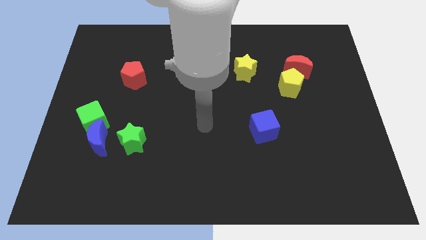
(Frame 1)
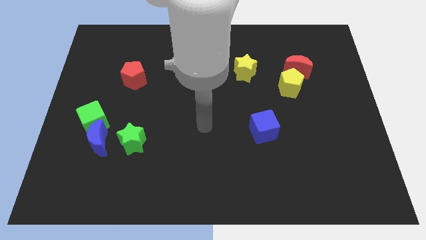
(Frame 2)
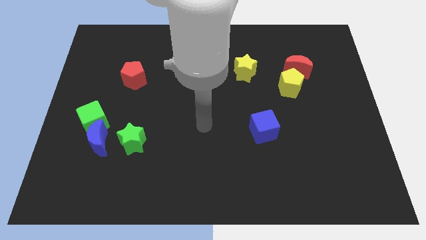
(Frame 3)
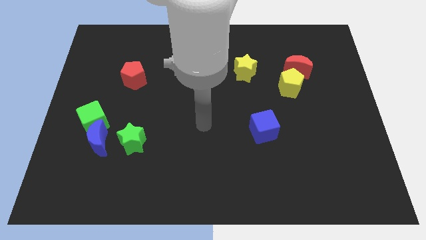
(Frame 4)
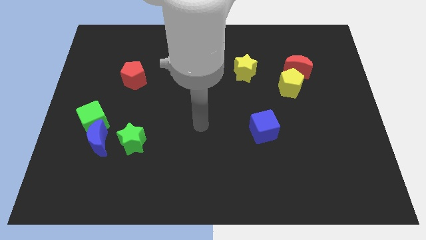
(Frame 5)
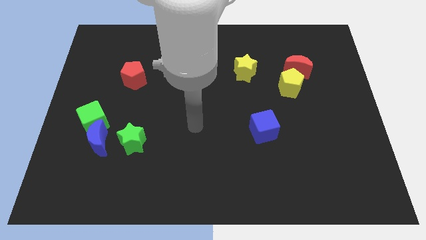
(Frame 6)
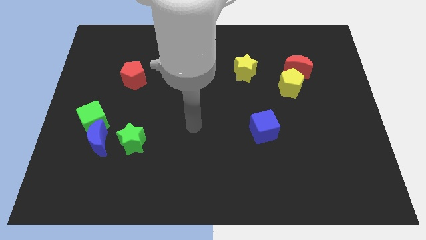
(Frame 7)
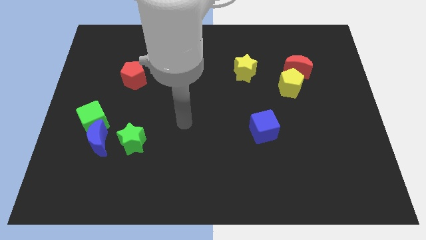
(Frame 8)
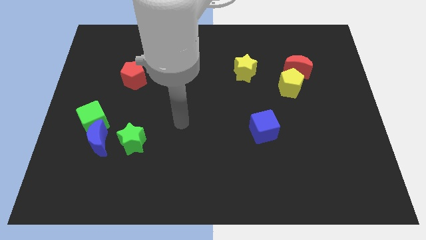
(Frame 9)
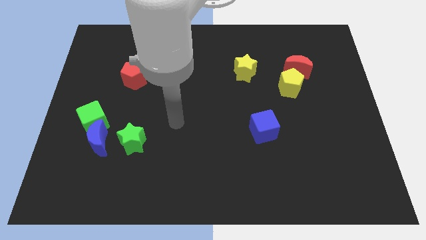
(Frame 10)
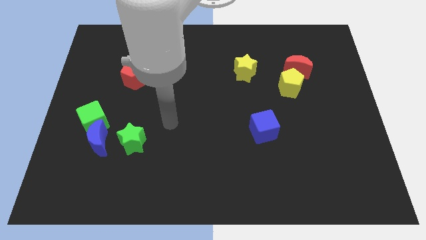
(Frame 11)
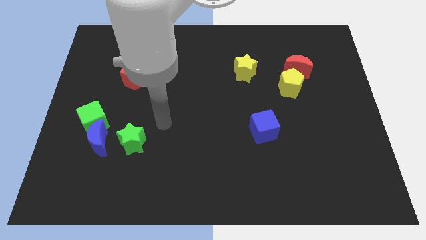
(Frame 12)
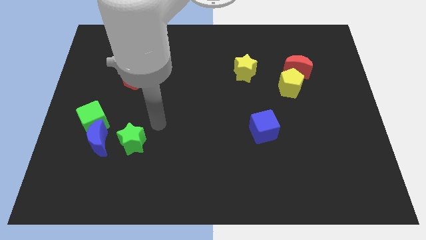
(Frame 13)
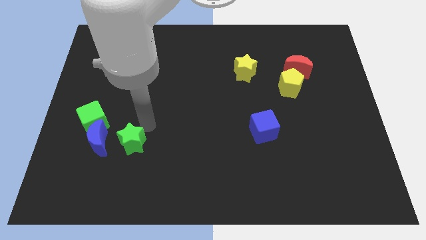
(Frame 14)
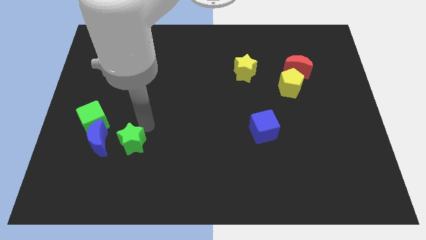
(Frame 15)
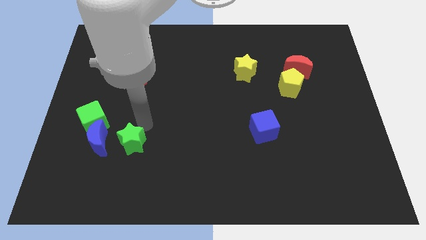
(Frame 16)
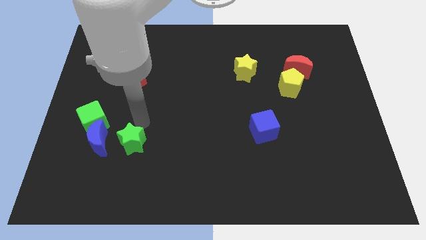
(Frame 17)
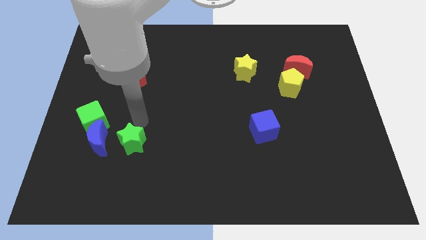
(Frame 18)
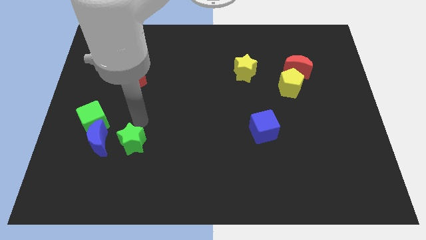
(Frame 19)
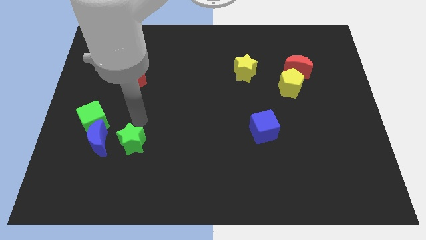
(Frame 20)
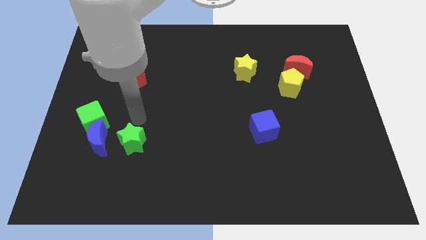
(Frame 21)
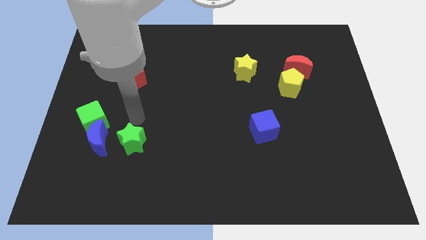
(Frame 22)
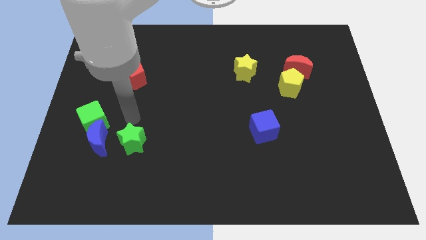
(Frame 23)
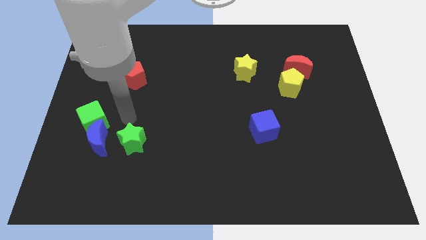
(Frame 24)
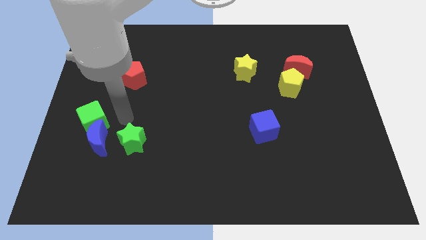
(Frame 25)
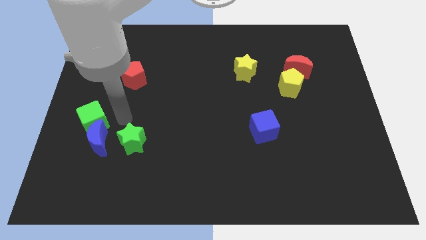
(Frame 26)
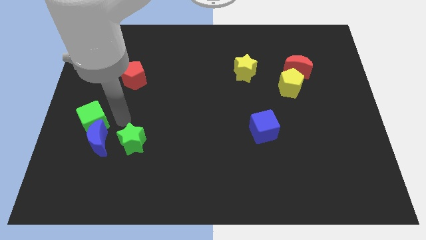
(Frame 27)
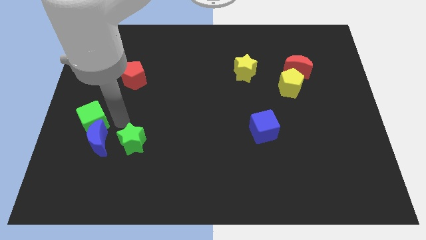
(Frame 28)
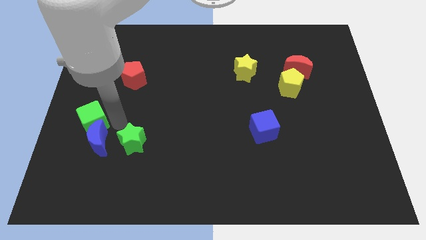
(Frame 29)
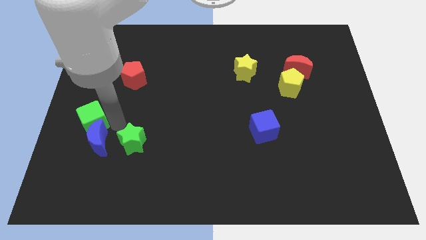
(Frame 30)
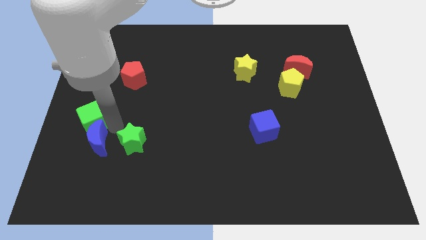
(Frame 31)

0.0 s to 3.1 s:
move your arm to the bottom left of the board

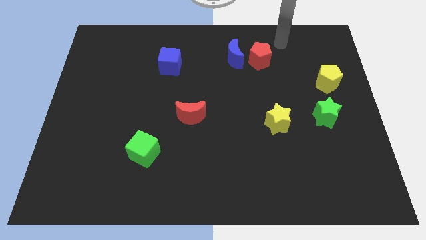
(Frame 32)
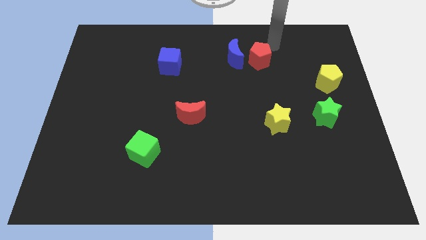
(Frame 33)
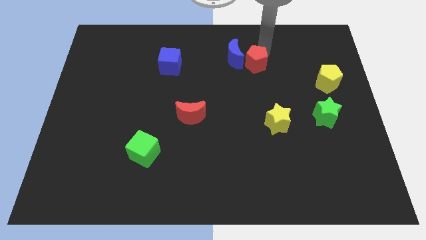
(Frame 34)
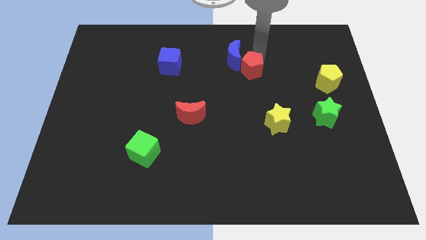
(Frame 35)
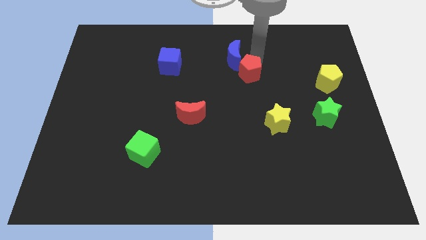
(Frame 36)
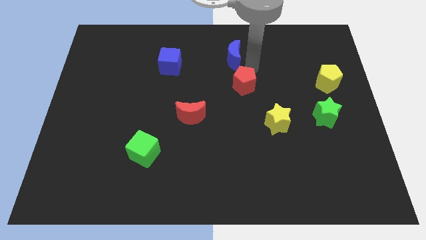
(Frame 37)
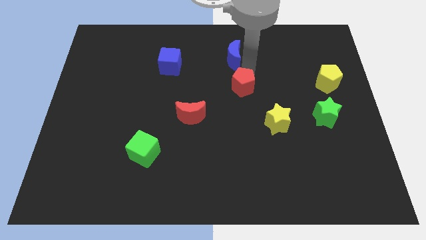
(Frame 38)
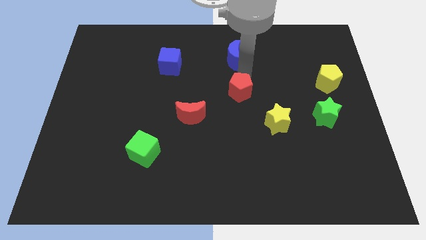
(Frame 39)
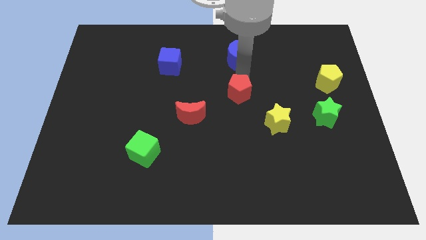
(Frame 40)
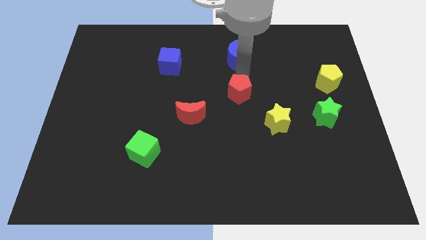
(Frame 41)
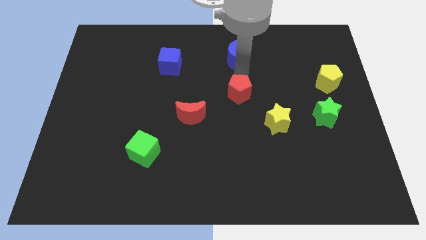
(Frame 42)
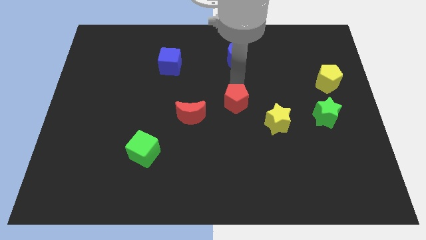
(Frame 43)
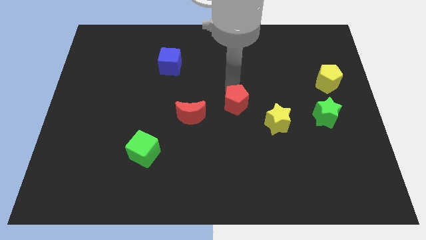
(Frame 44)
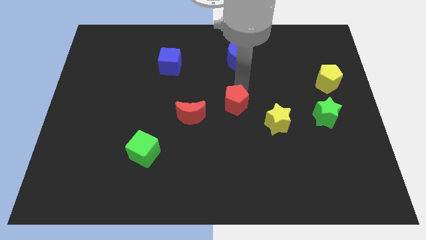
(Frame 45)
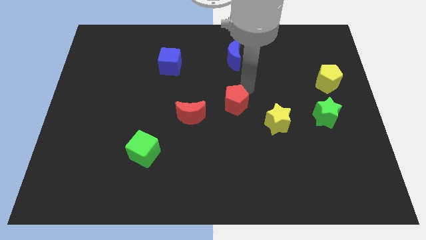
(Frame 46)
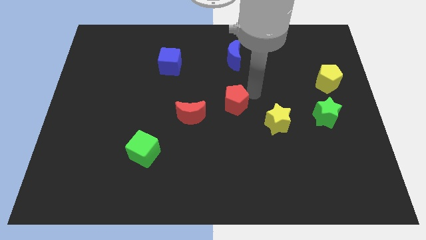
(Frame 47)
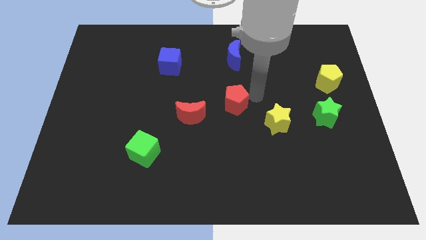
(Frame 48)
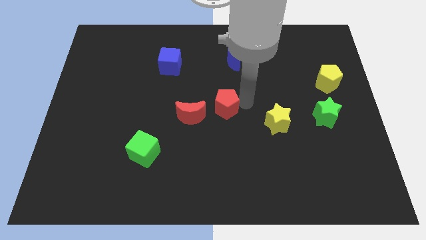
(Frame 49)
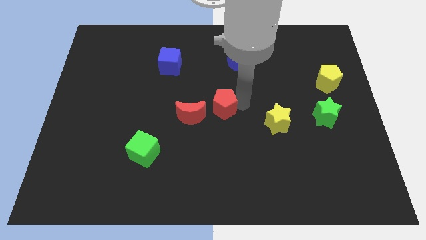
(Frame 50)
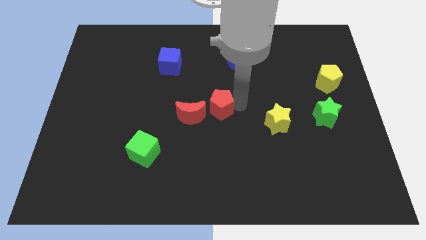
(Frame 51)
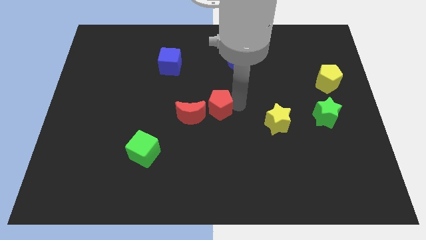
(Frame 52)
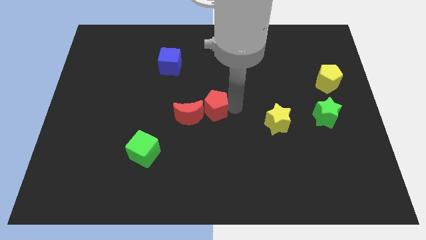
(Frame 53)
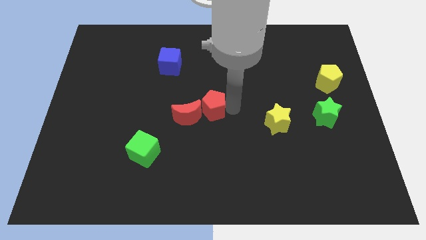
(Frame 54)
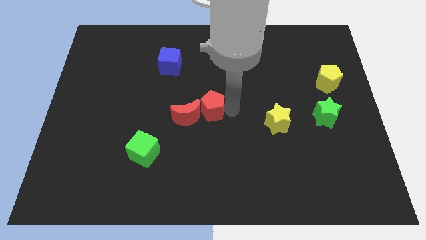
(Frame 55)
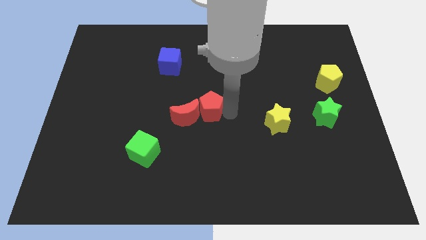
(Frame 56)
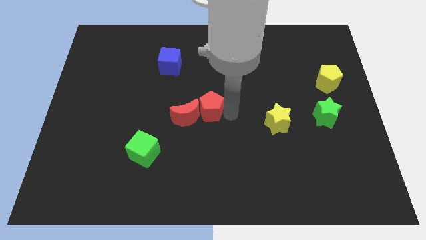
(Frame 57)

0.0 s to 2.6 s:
move the red pentagon into the red crescent

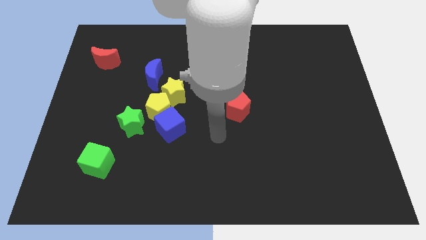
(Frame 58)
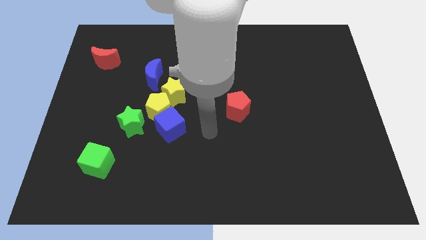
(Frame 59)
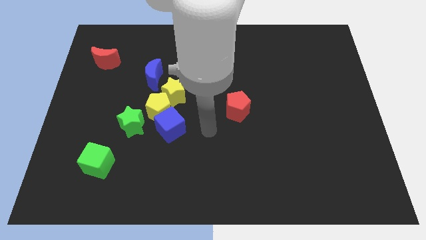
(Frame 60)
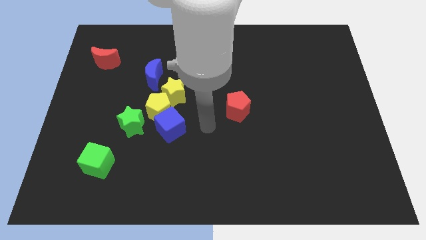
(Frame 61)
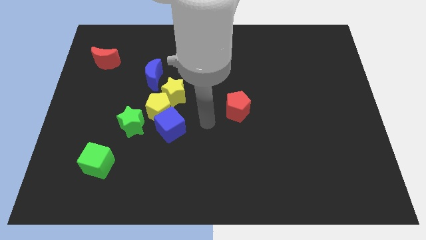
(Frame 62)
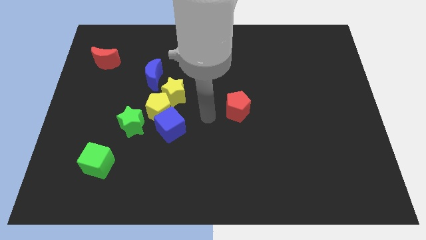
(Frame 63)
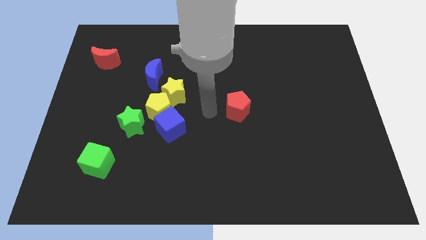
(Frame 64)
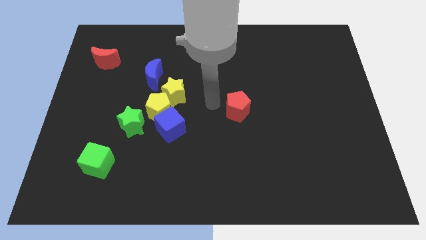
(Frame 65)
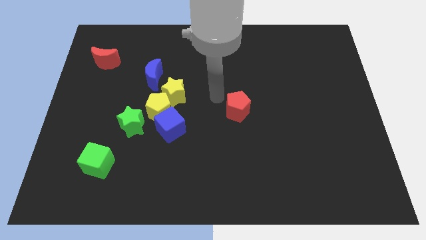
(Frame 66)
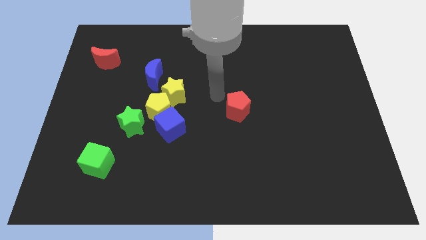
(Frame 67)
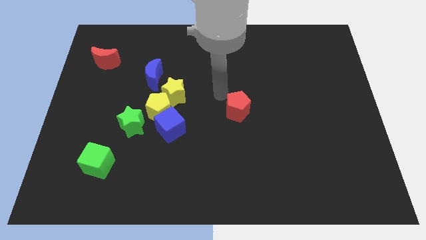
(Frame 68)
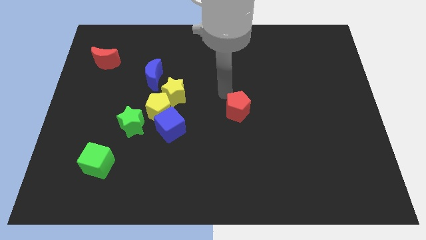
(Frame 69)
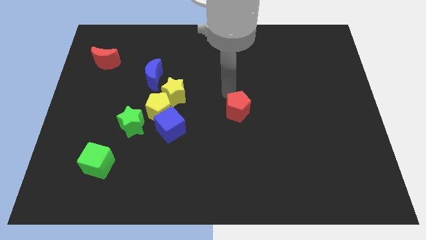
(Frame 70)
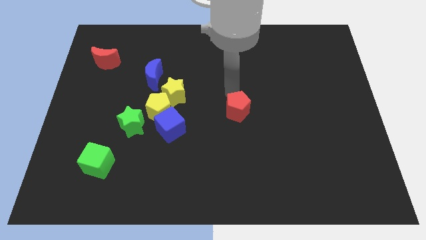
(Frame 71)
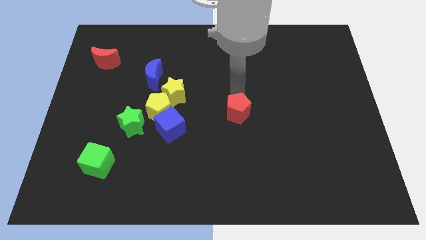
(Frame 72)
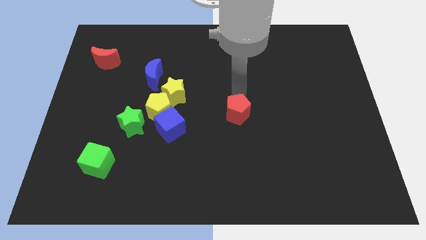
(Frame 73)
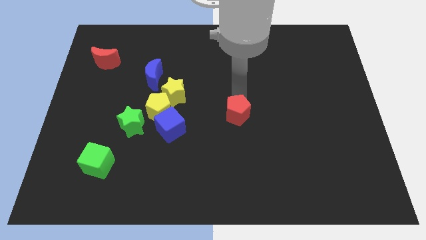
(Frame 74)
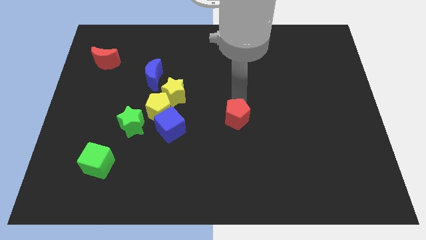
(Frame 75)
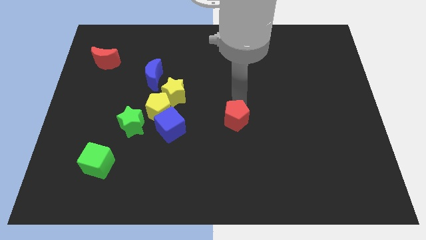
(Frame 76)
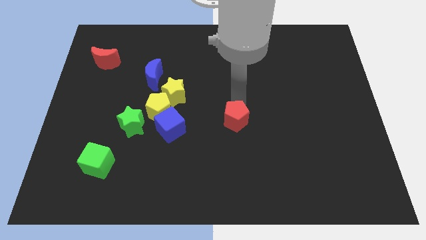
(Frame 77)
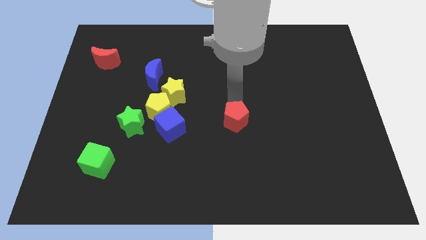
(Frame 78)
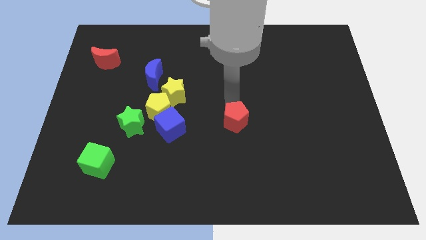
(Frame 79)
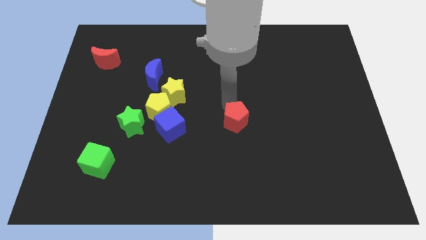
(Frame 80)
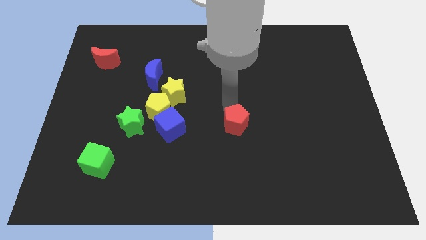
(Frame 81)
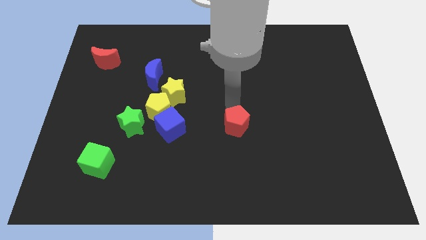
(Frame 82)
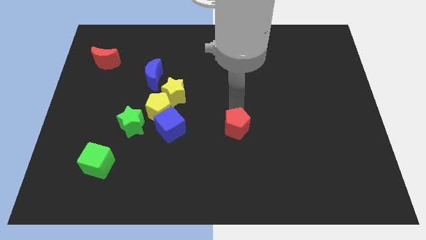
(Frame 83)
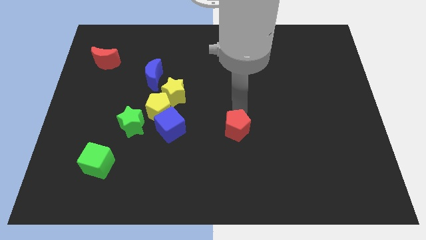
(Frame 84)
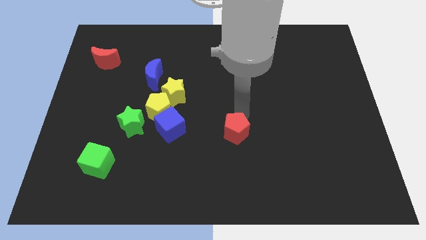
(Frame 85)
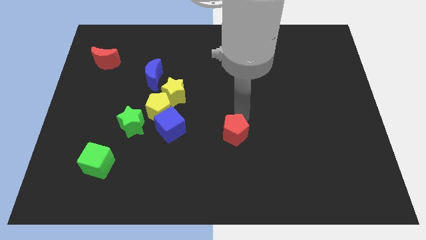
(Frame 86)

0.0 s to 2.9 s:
push the red pentagon downwards

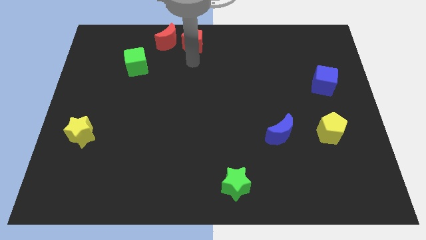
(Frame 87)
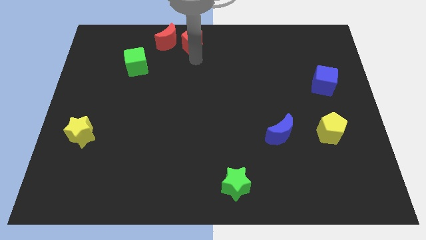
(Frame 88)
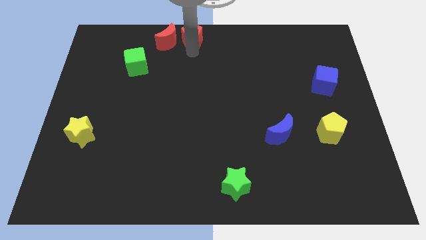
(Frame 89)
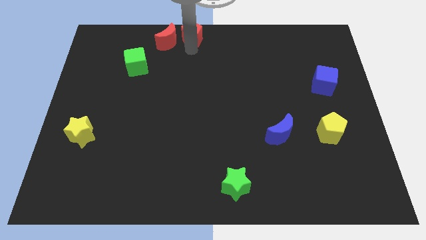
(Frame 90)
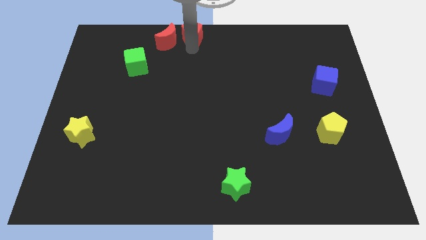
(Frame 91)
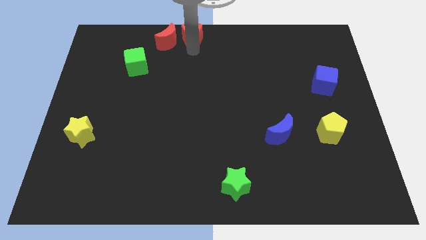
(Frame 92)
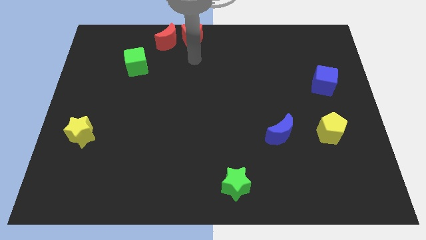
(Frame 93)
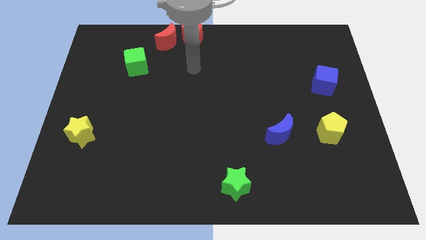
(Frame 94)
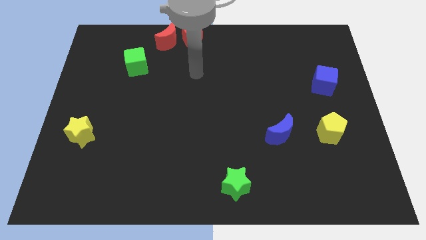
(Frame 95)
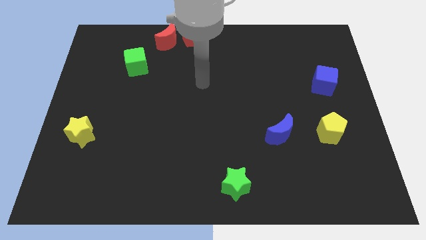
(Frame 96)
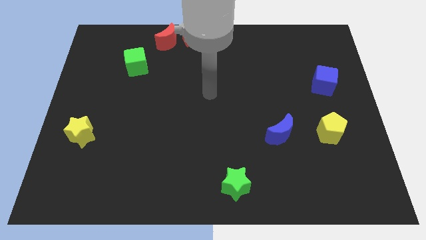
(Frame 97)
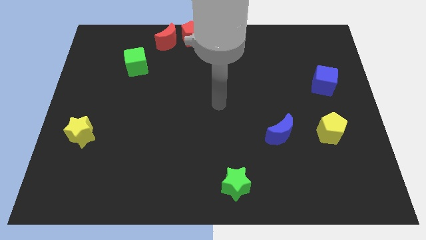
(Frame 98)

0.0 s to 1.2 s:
move the arm towards the ceneter of the board
